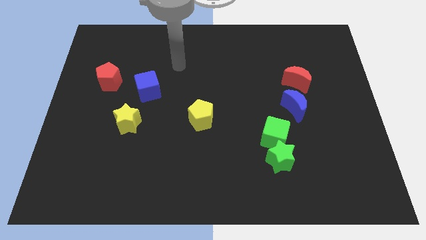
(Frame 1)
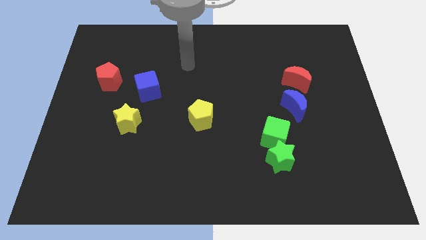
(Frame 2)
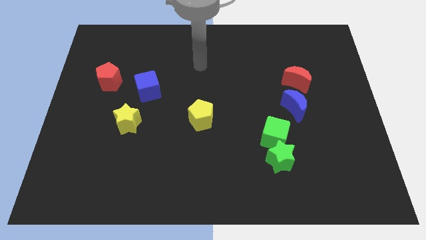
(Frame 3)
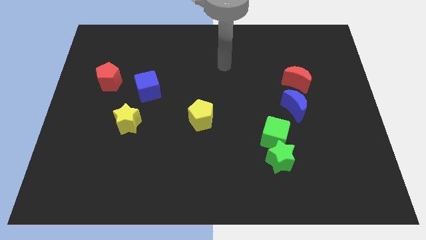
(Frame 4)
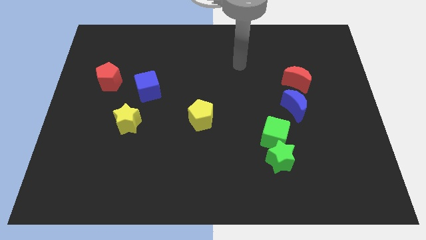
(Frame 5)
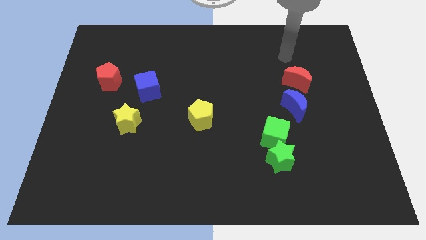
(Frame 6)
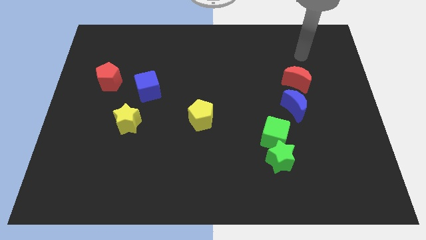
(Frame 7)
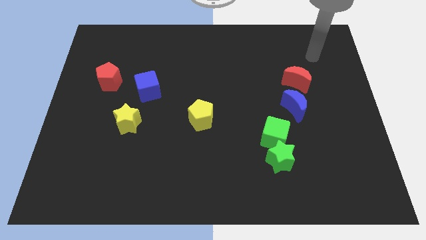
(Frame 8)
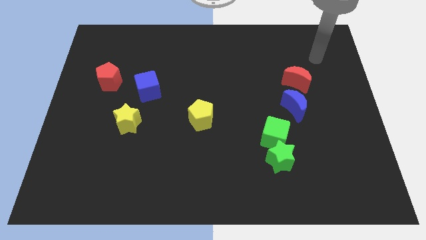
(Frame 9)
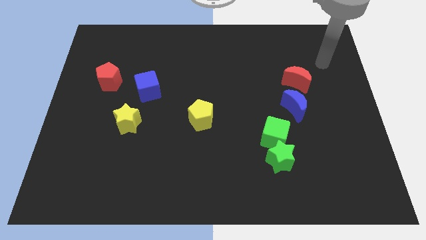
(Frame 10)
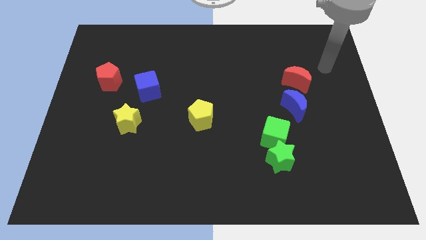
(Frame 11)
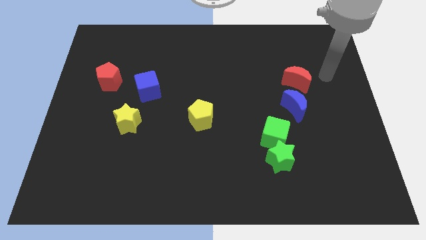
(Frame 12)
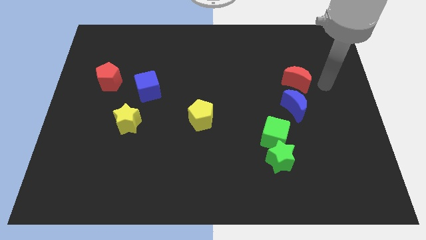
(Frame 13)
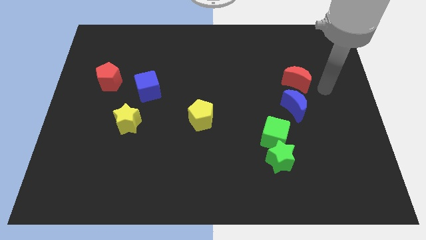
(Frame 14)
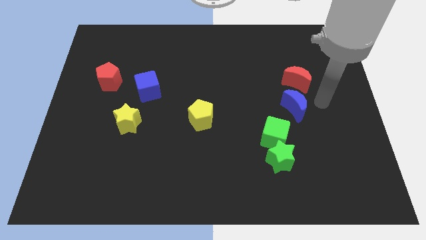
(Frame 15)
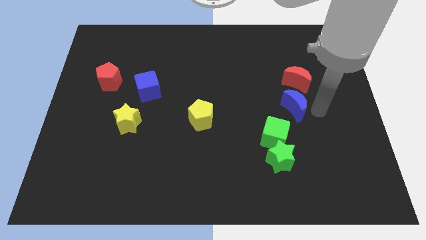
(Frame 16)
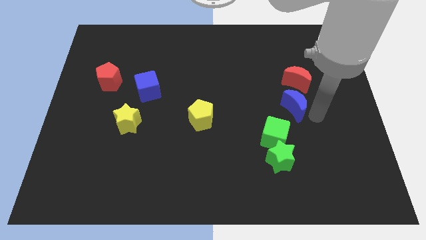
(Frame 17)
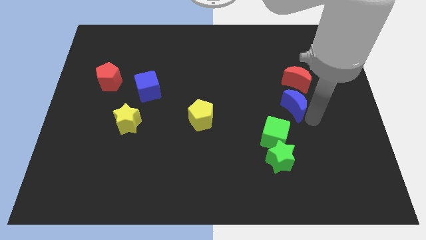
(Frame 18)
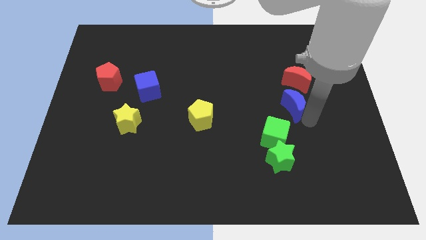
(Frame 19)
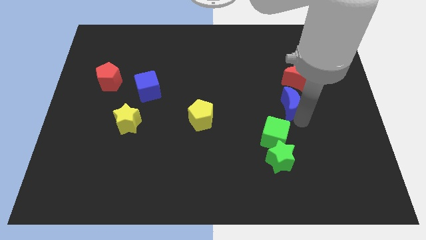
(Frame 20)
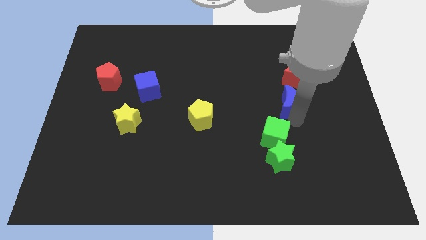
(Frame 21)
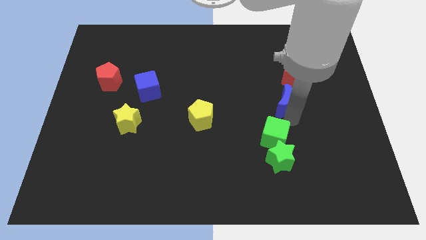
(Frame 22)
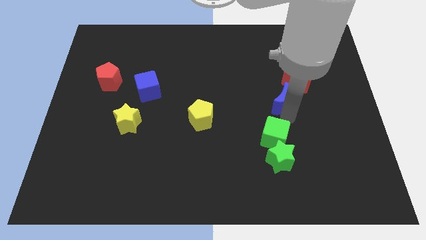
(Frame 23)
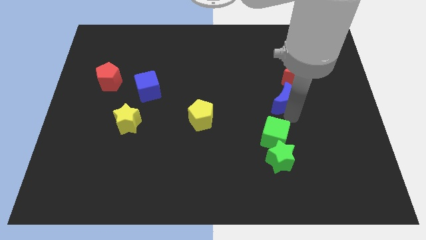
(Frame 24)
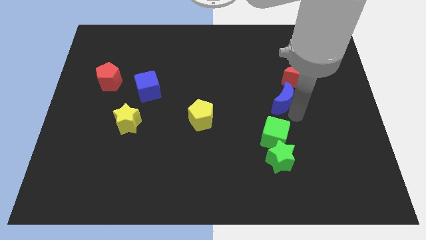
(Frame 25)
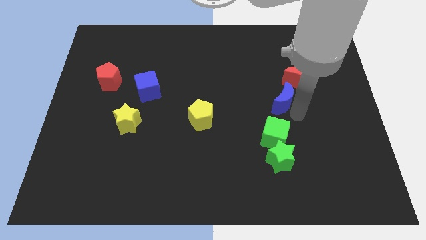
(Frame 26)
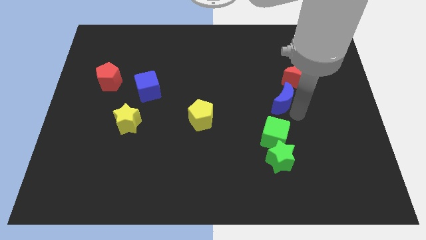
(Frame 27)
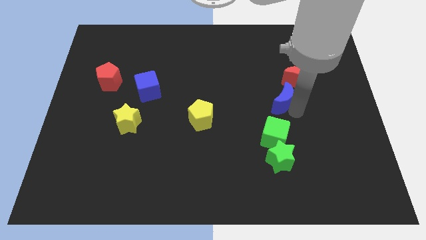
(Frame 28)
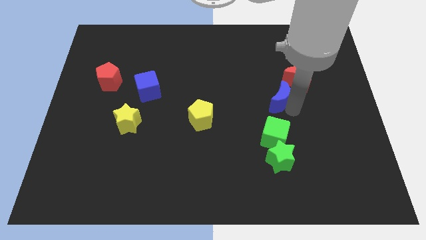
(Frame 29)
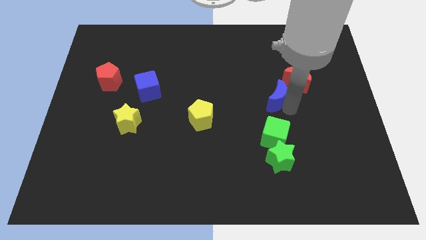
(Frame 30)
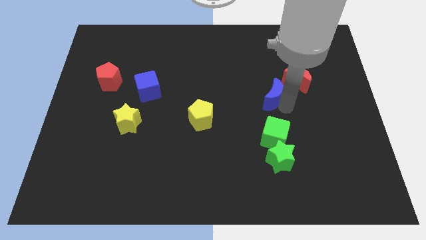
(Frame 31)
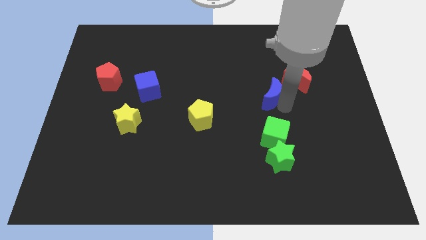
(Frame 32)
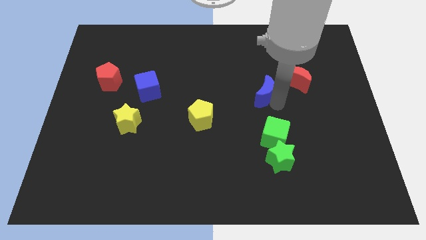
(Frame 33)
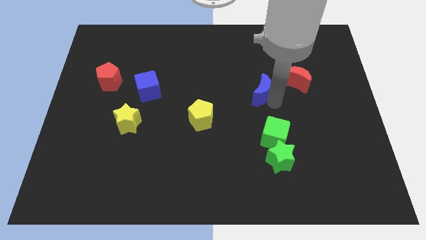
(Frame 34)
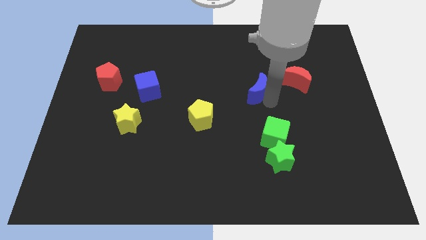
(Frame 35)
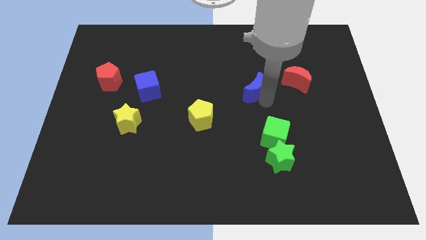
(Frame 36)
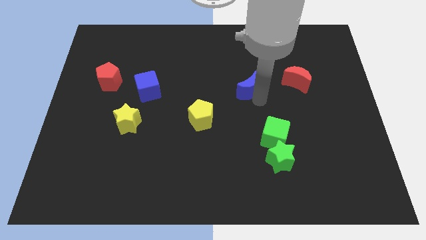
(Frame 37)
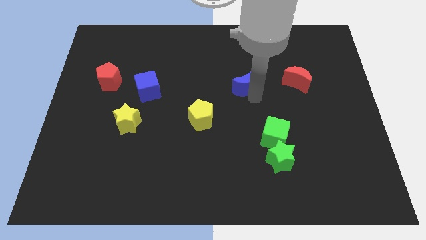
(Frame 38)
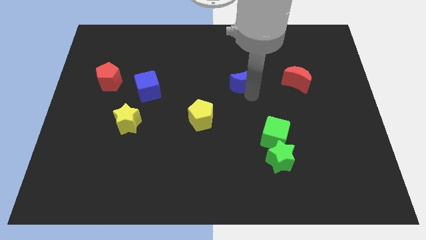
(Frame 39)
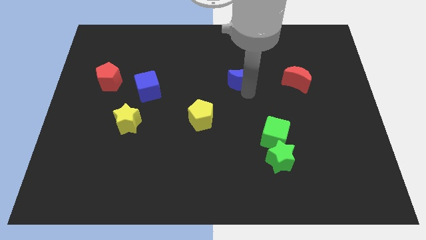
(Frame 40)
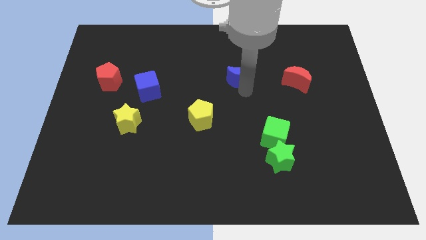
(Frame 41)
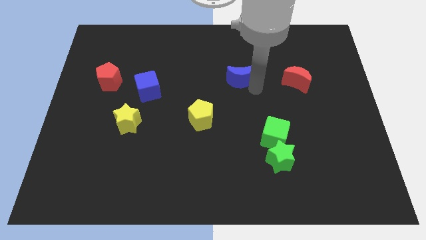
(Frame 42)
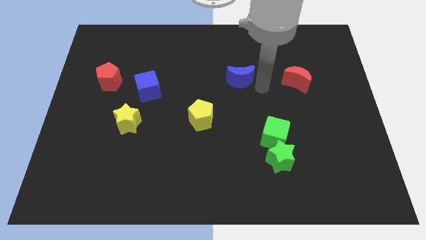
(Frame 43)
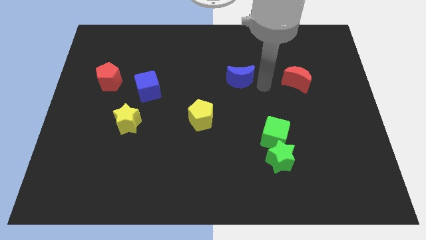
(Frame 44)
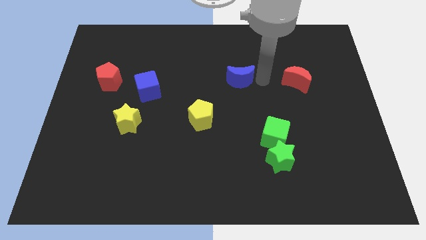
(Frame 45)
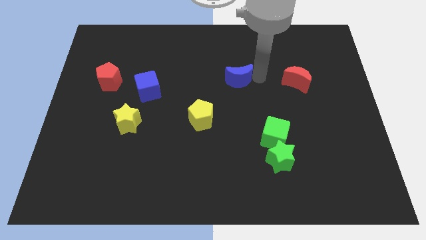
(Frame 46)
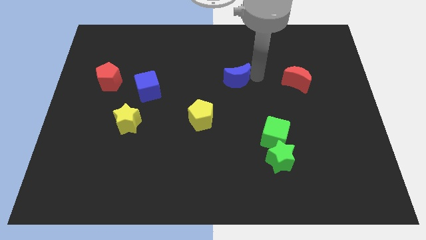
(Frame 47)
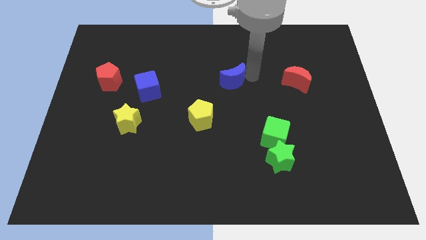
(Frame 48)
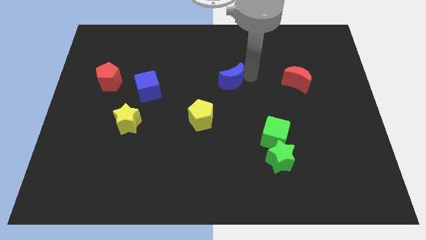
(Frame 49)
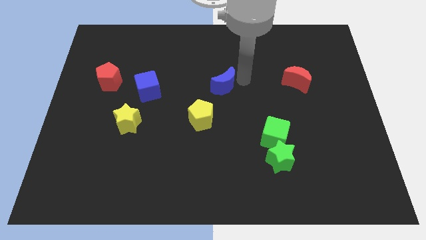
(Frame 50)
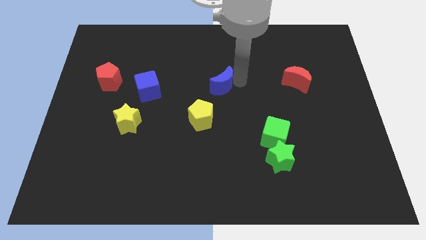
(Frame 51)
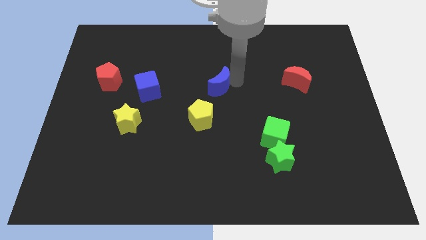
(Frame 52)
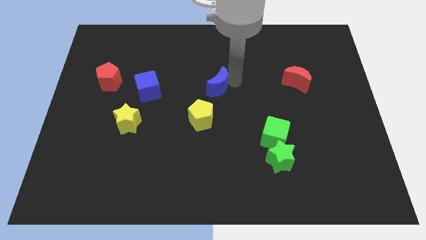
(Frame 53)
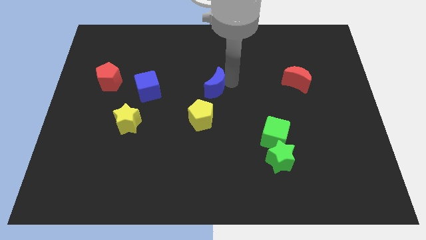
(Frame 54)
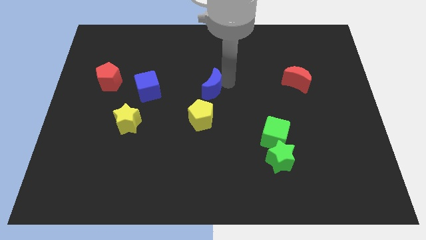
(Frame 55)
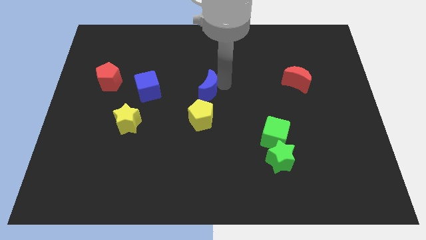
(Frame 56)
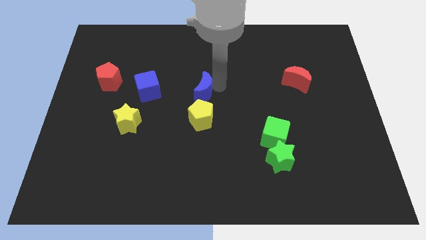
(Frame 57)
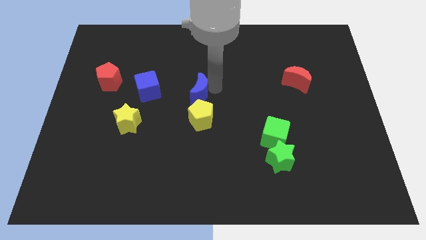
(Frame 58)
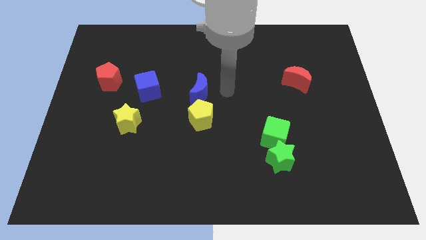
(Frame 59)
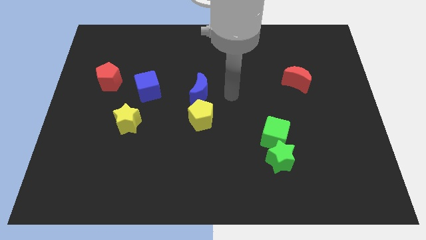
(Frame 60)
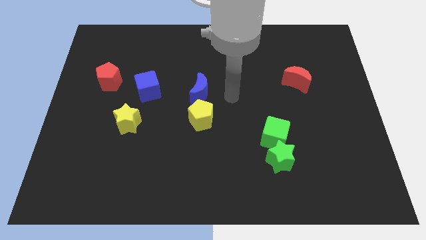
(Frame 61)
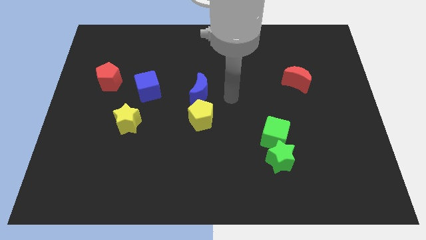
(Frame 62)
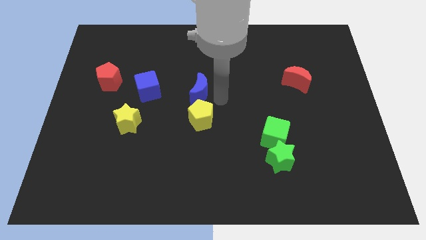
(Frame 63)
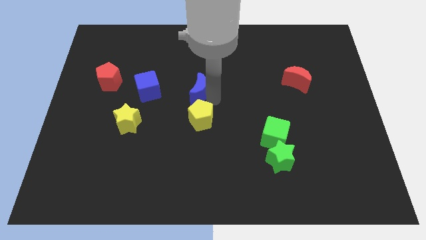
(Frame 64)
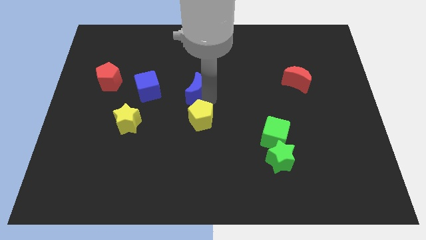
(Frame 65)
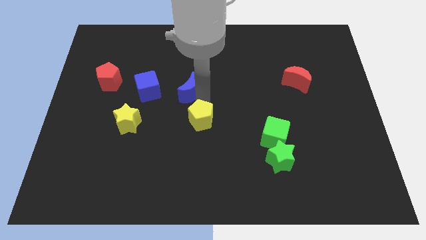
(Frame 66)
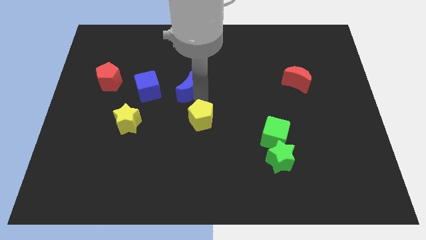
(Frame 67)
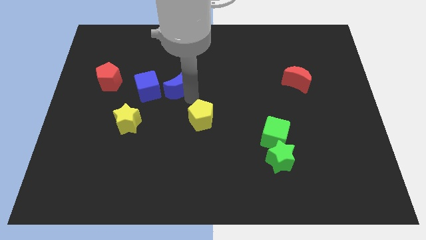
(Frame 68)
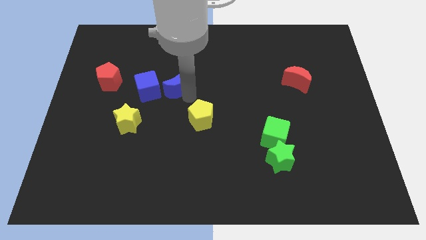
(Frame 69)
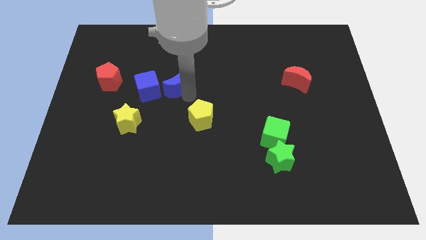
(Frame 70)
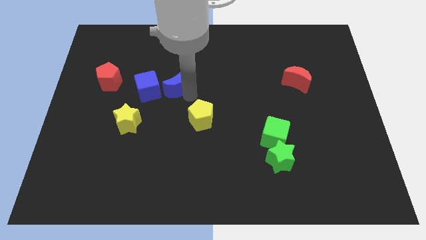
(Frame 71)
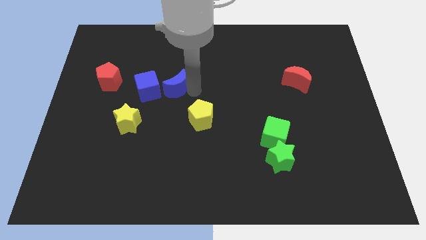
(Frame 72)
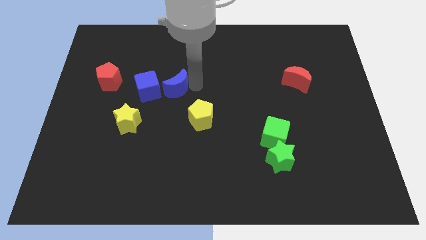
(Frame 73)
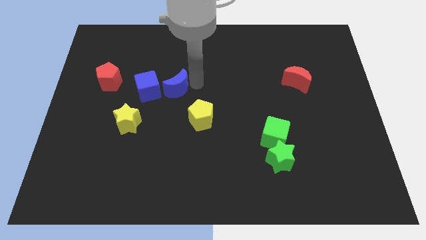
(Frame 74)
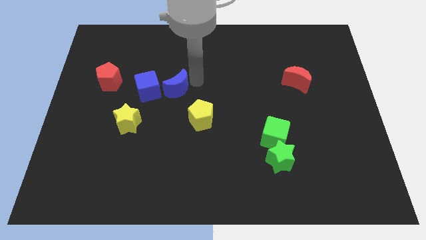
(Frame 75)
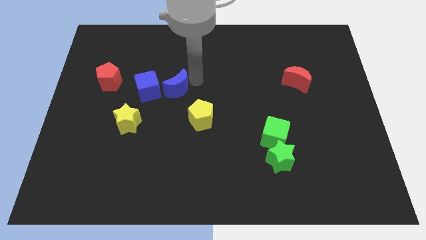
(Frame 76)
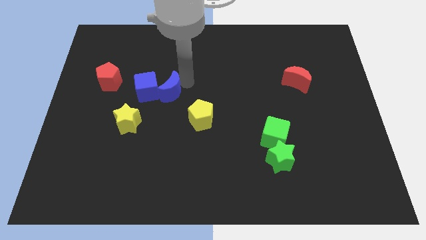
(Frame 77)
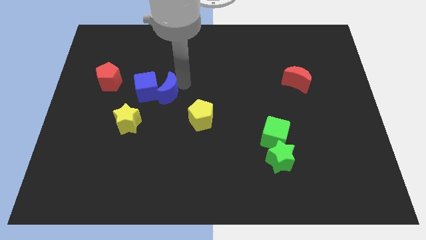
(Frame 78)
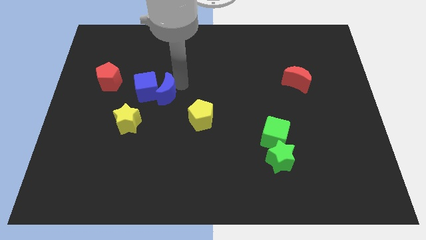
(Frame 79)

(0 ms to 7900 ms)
put the blue moon towards the blue cube

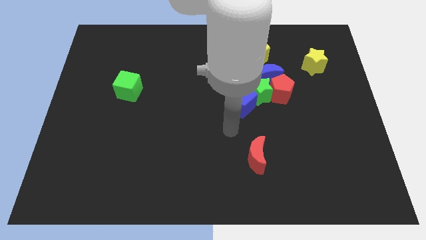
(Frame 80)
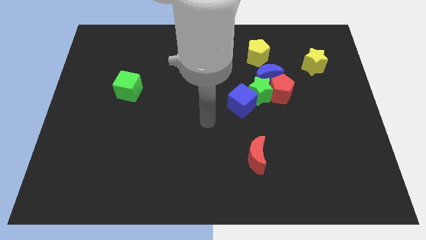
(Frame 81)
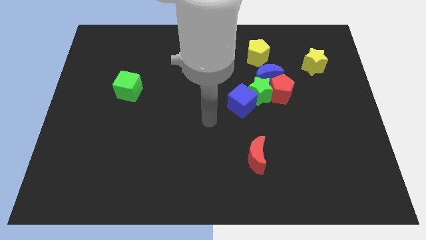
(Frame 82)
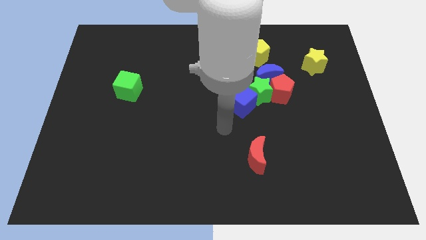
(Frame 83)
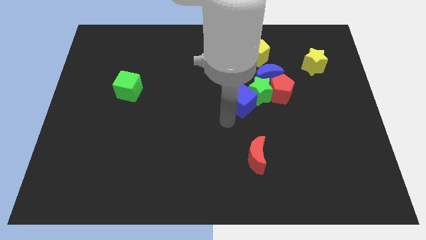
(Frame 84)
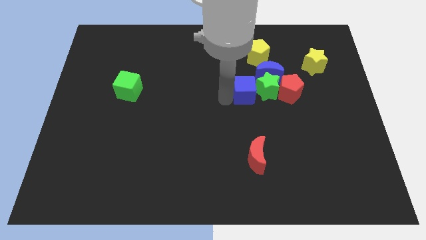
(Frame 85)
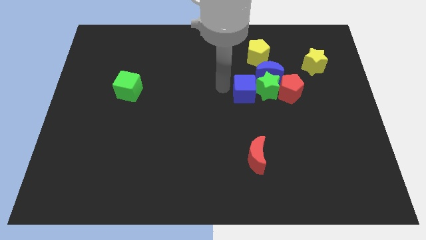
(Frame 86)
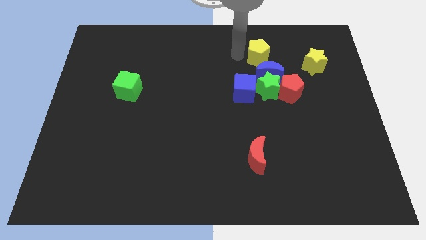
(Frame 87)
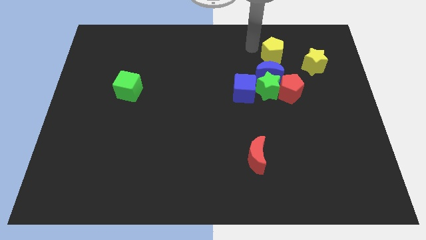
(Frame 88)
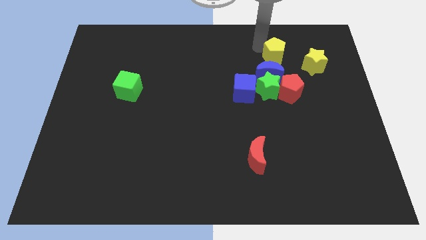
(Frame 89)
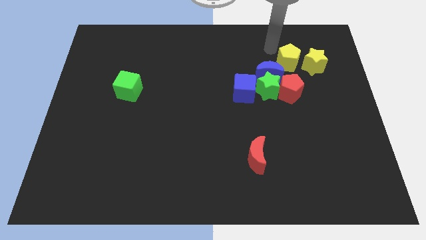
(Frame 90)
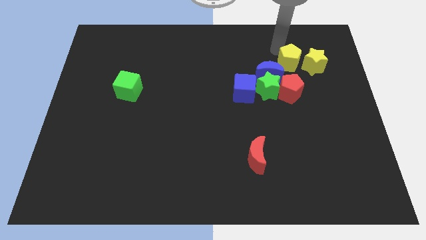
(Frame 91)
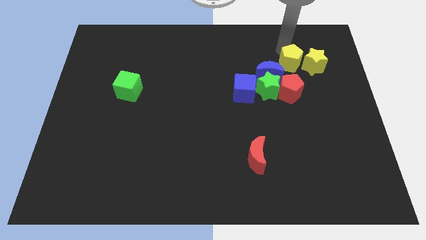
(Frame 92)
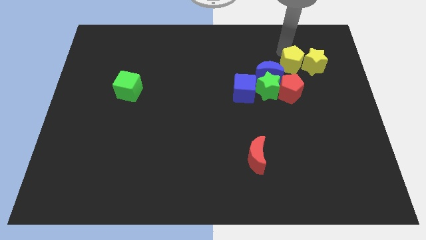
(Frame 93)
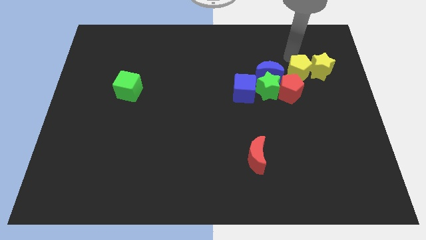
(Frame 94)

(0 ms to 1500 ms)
slide the yellow pentagon towards the yellow star
